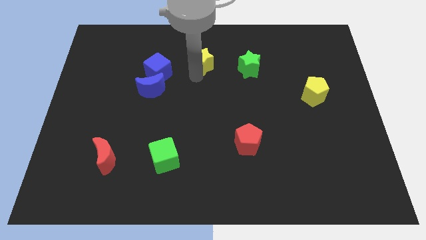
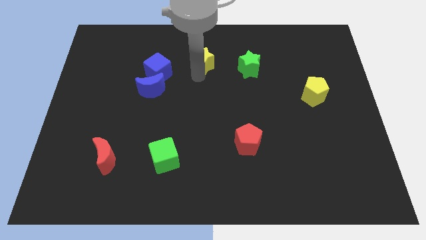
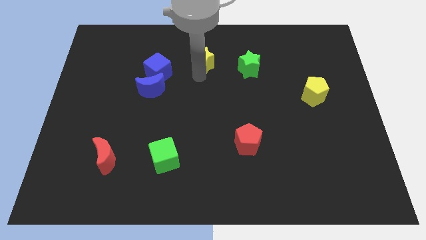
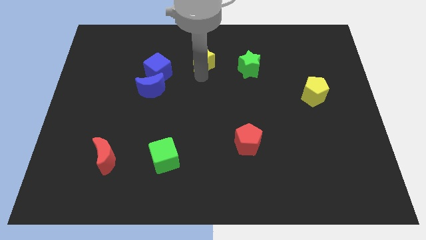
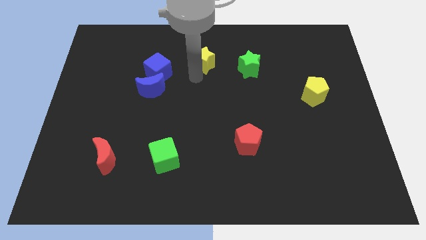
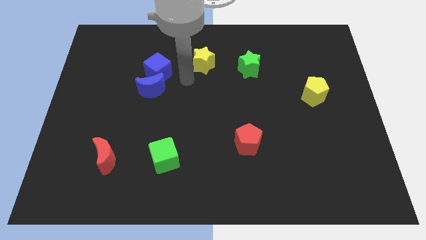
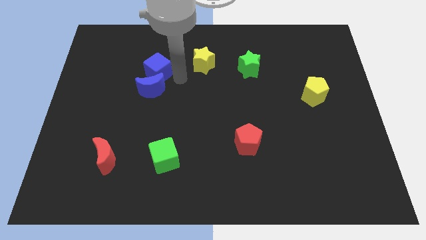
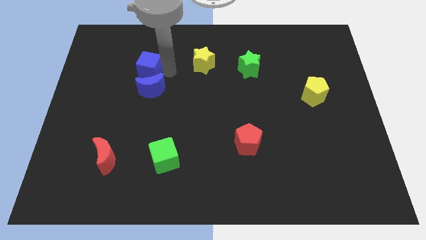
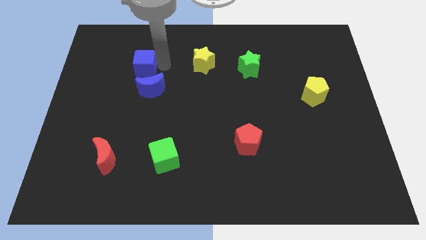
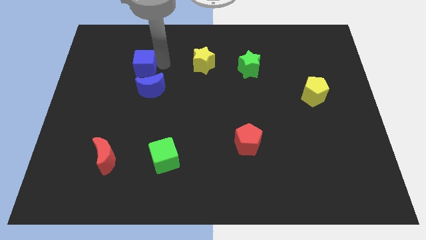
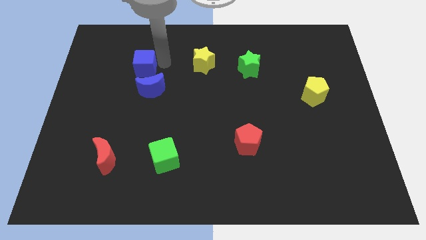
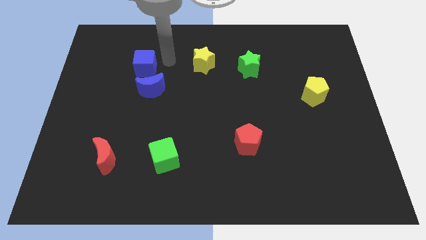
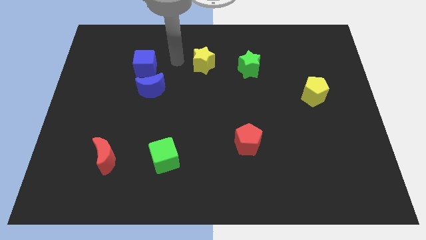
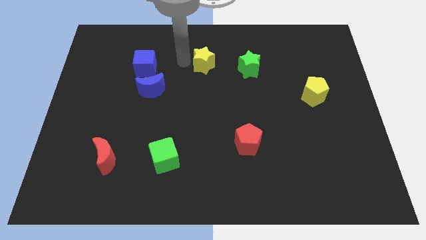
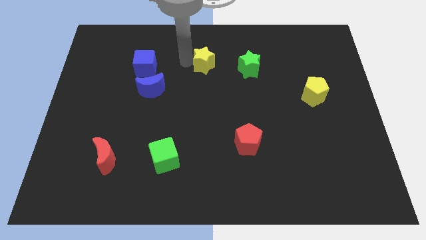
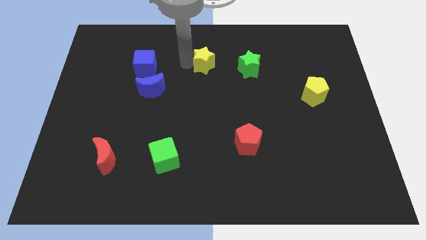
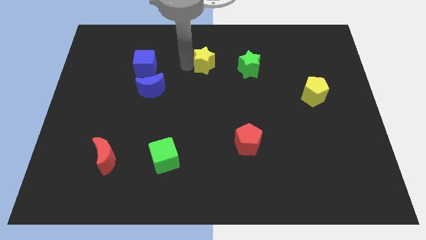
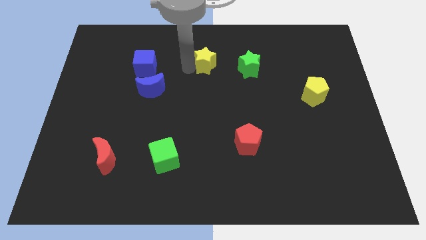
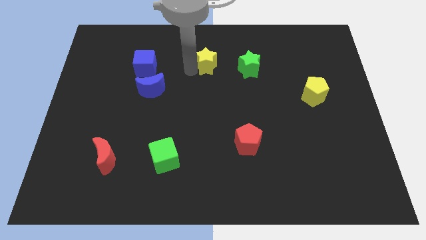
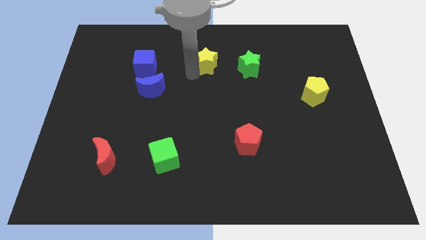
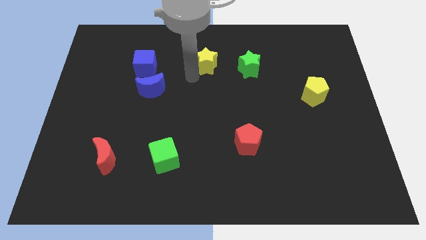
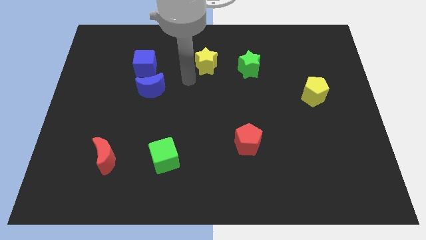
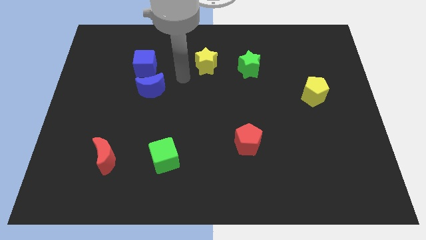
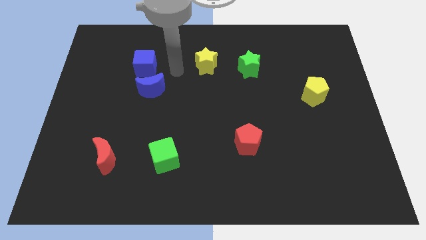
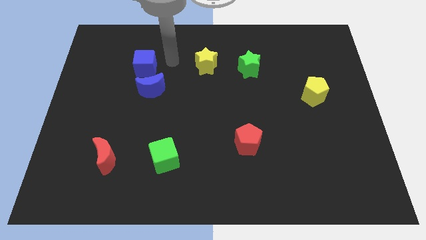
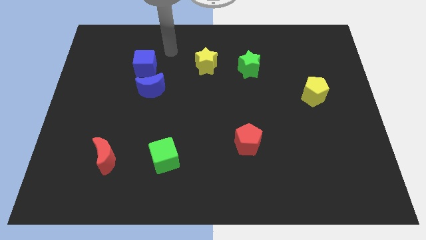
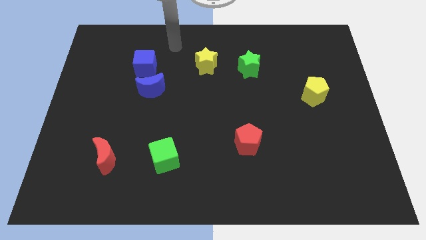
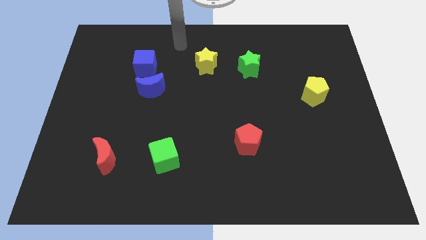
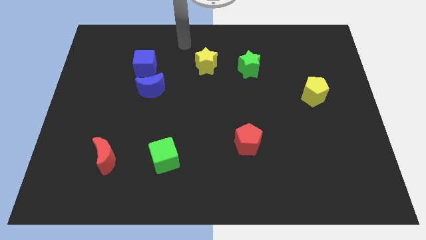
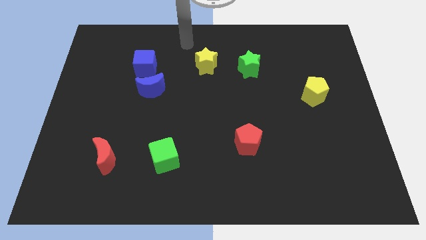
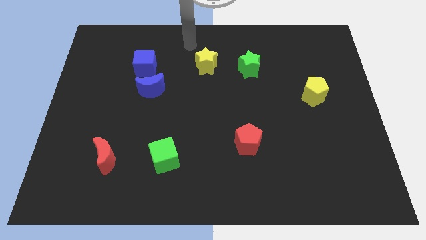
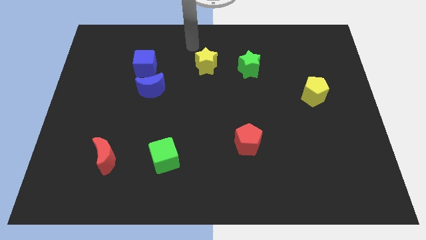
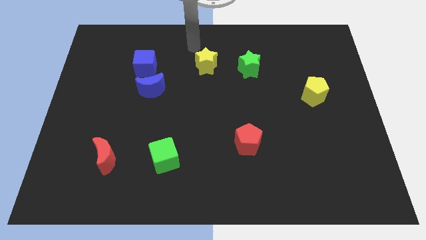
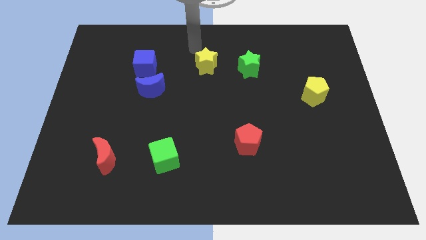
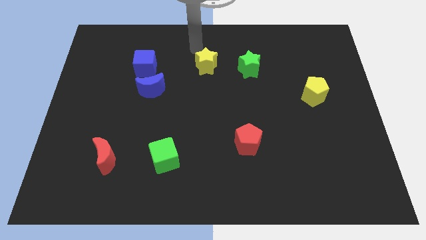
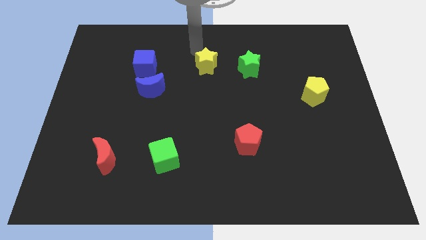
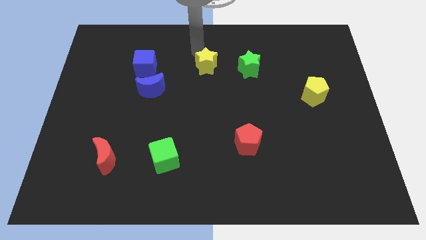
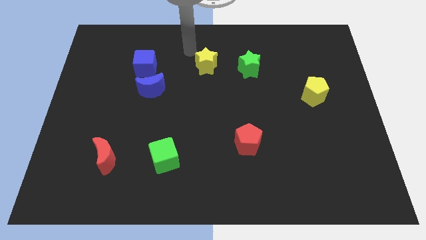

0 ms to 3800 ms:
place the blue cube parallel to the yellow star

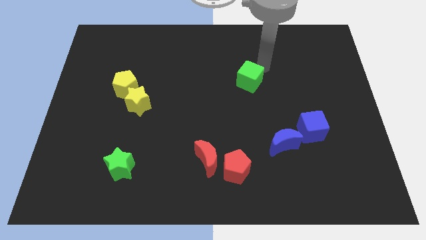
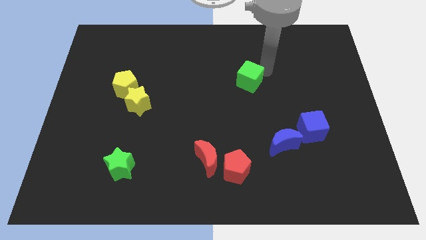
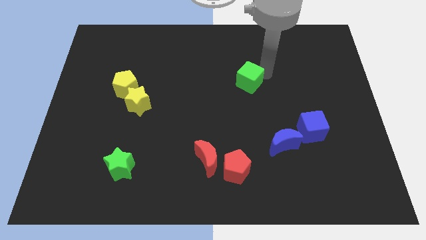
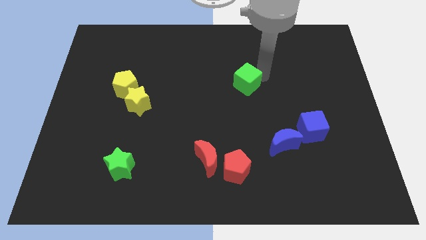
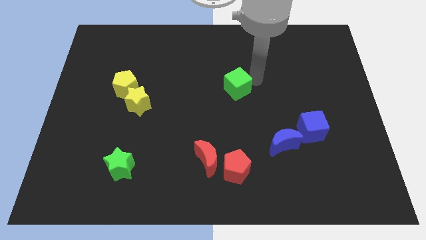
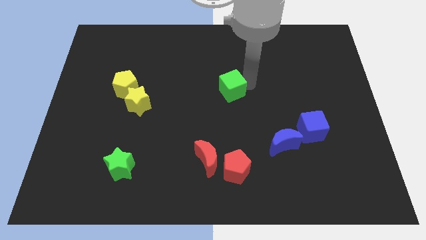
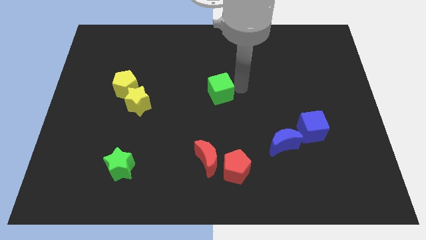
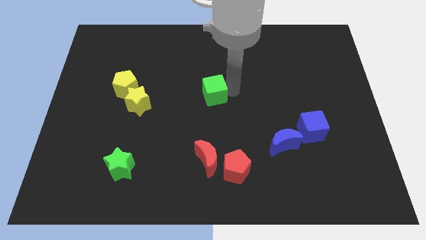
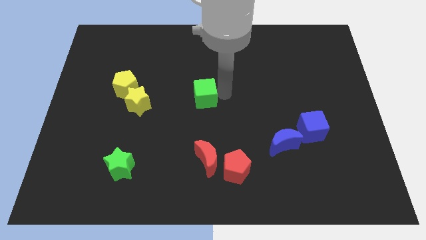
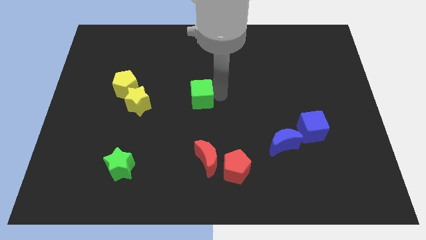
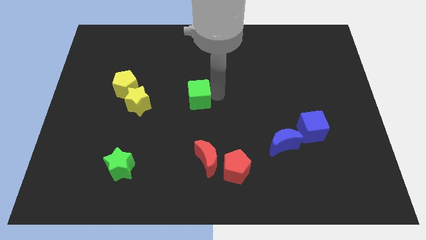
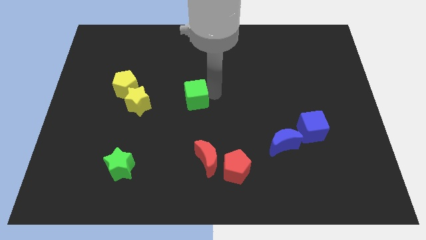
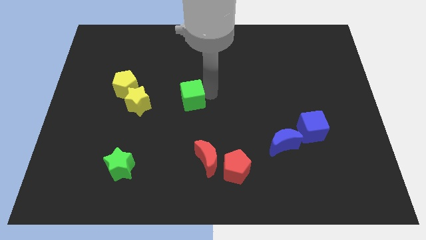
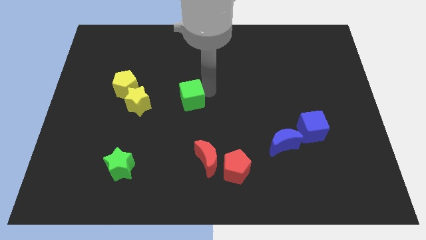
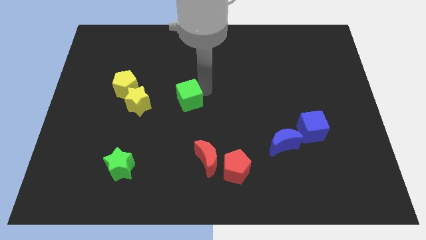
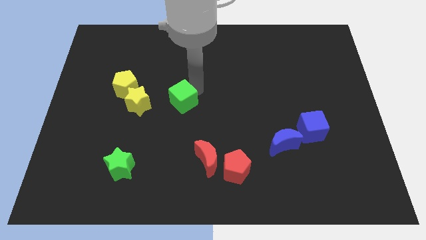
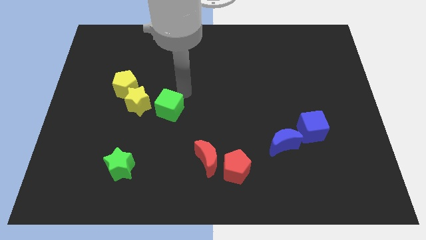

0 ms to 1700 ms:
move the green cube horizontally right to the yellow star

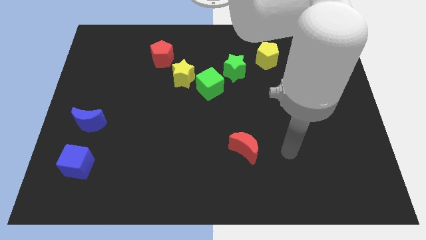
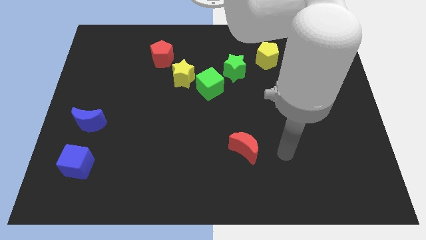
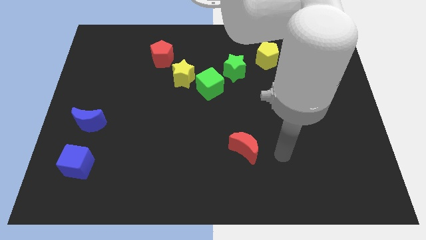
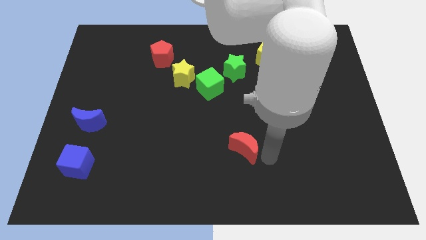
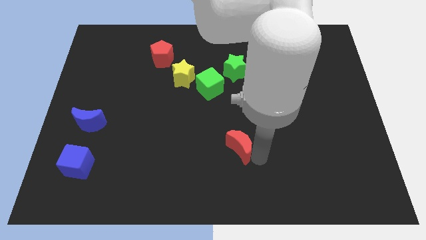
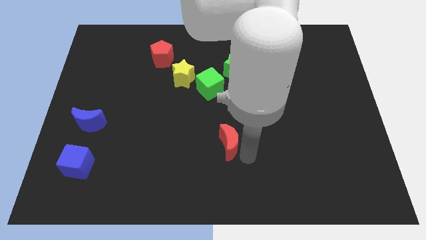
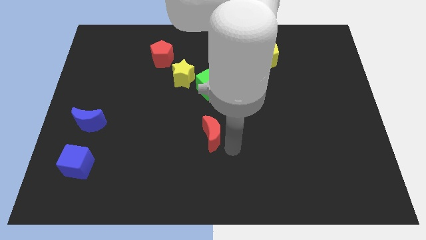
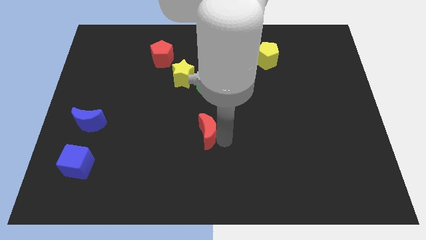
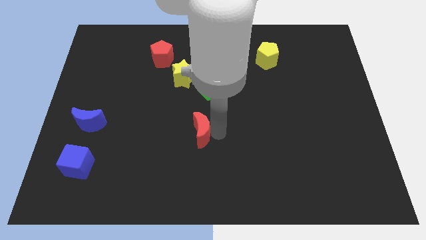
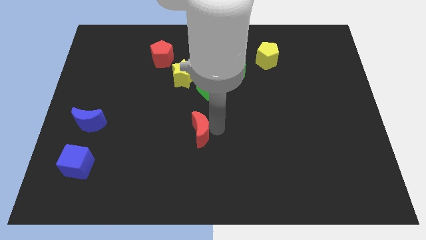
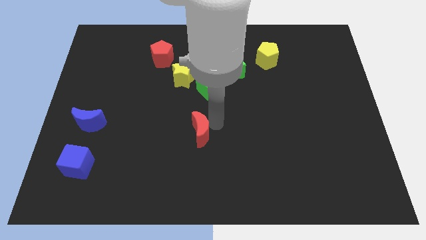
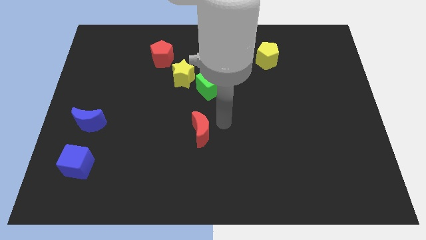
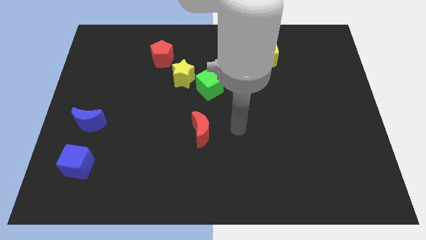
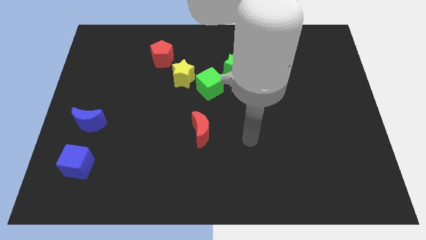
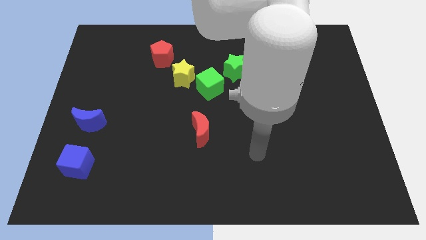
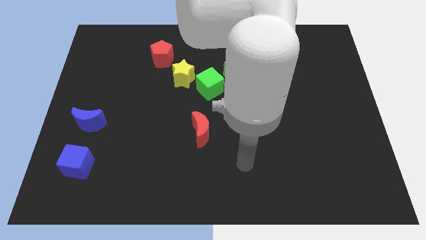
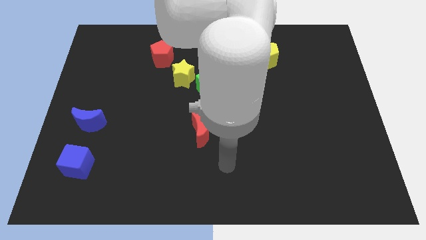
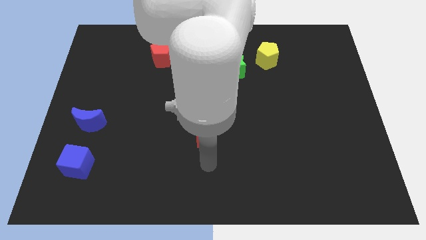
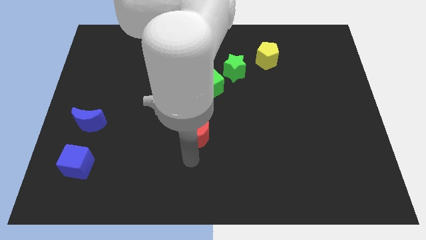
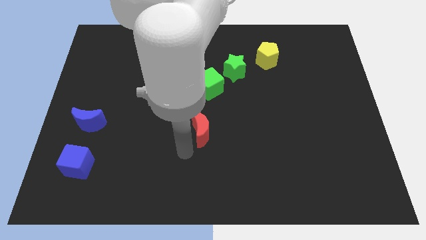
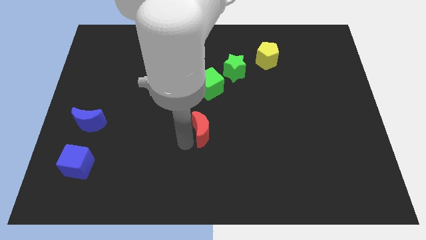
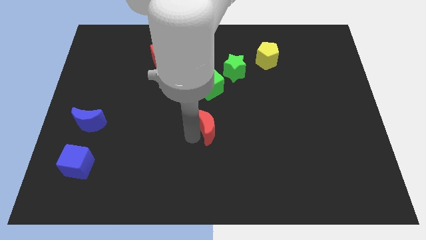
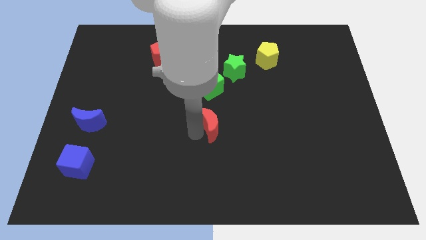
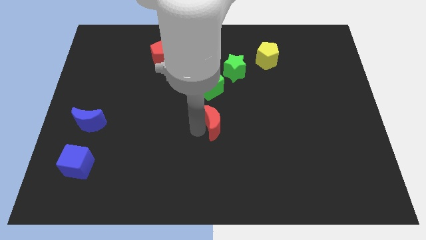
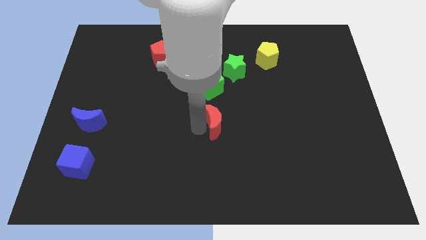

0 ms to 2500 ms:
push the red moon towards green cube

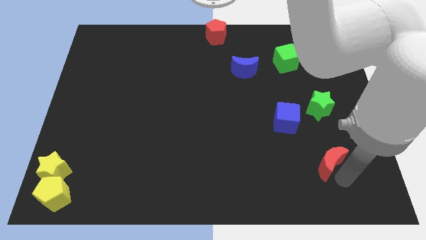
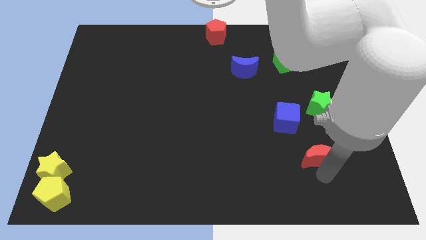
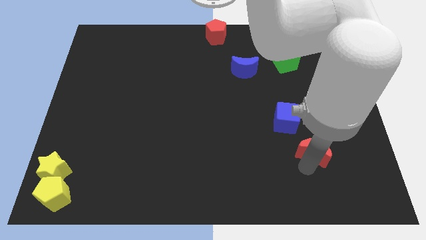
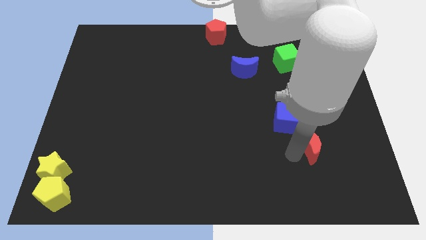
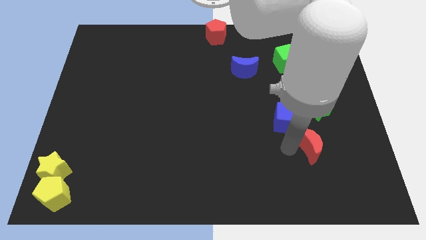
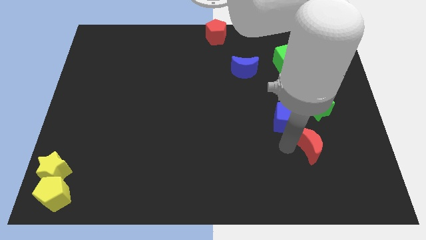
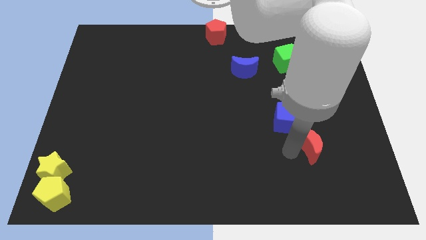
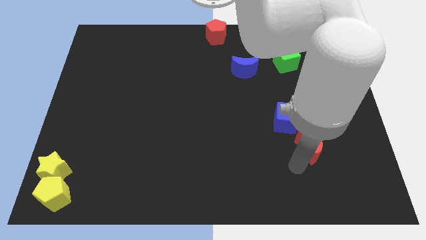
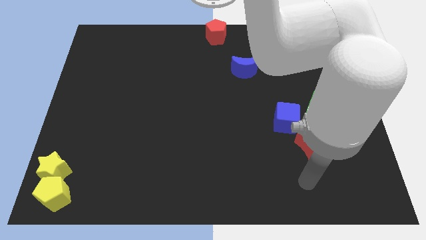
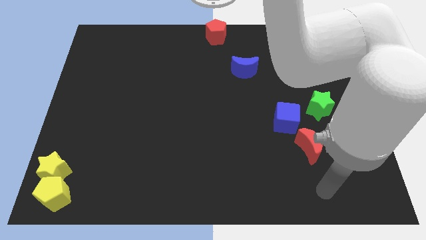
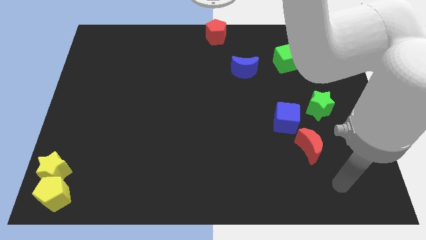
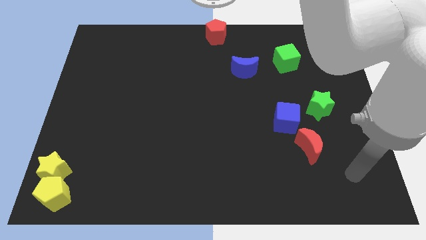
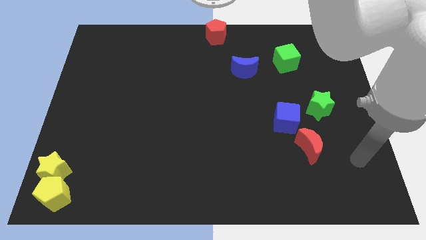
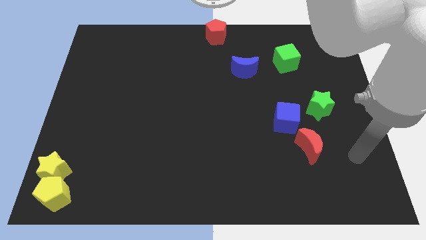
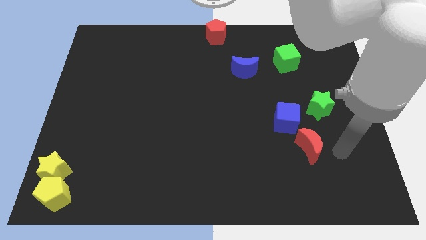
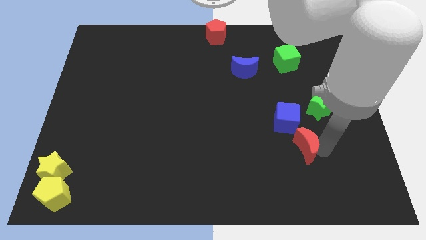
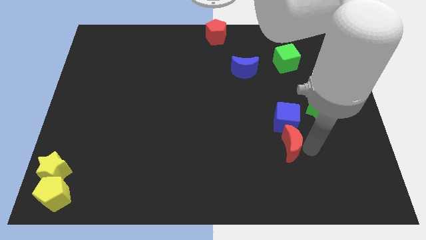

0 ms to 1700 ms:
move the red moon vertically below the blue cube
